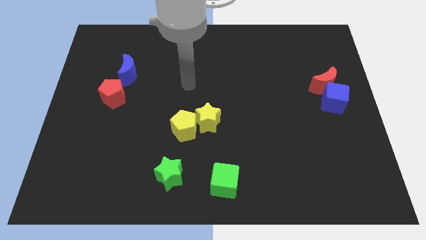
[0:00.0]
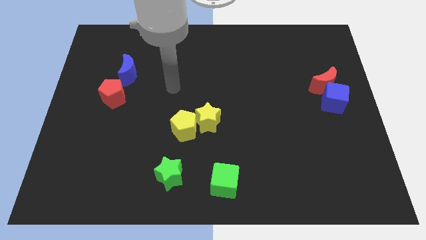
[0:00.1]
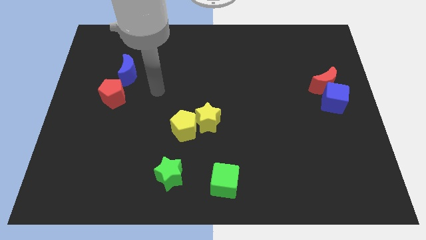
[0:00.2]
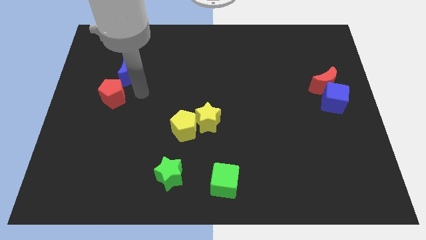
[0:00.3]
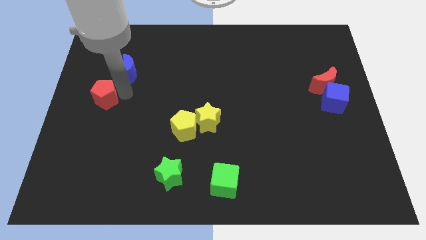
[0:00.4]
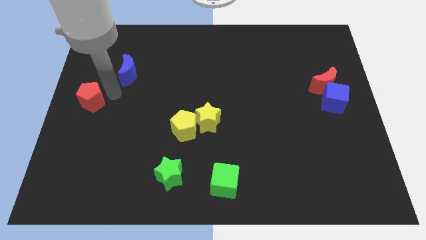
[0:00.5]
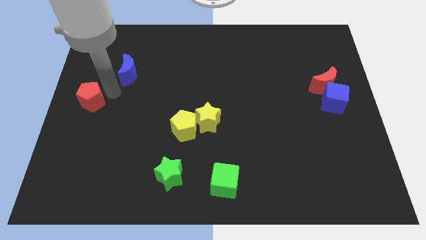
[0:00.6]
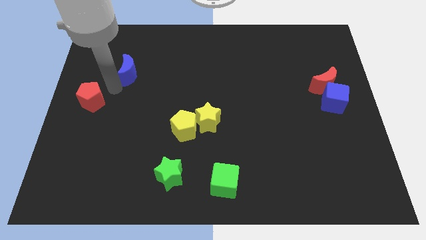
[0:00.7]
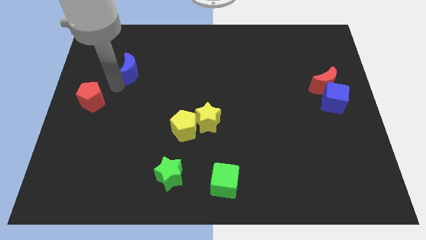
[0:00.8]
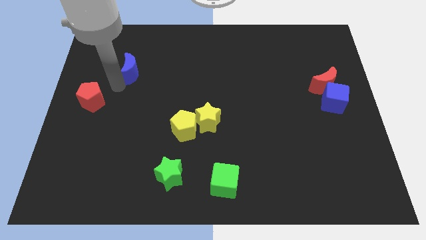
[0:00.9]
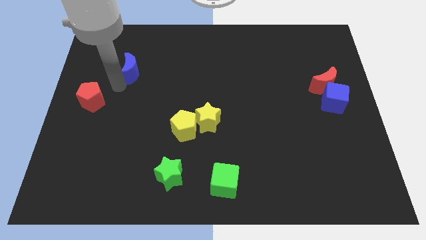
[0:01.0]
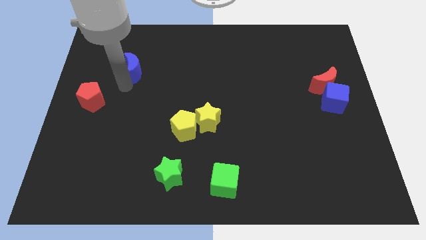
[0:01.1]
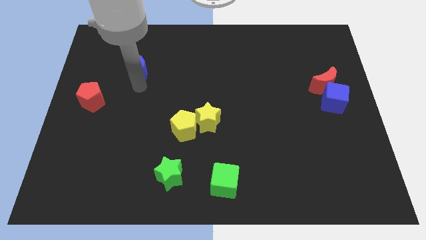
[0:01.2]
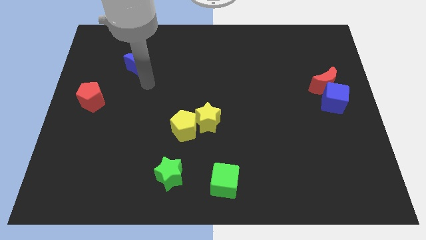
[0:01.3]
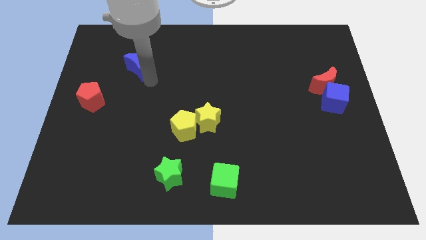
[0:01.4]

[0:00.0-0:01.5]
separate the blue moon from the red pentagon

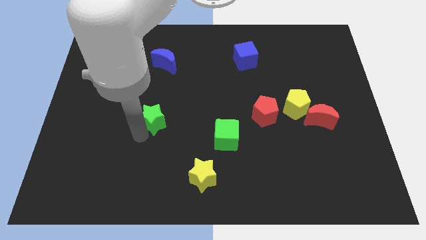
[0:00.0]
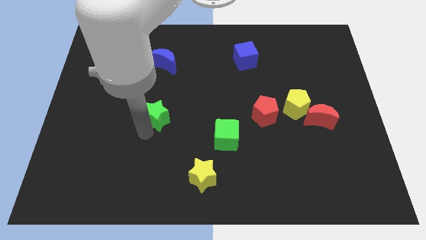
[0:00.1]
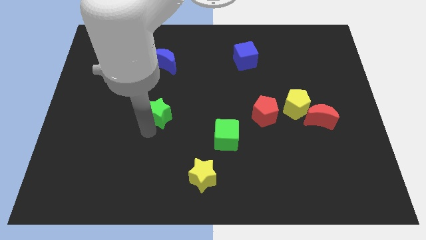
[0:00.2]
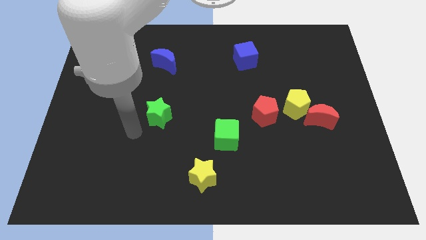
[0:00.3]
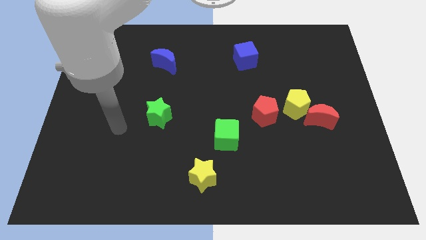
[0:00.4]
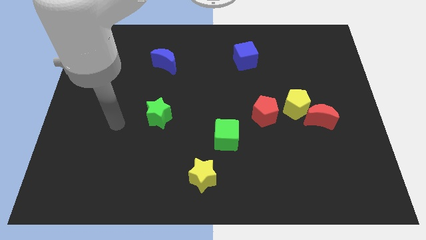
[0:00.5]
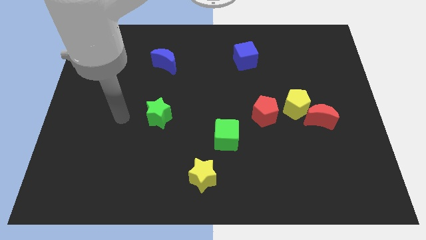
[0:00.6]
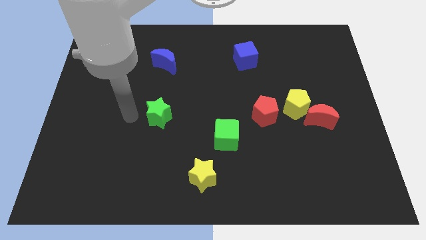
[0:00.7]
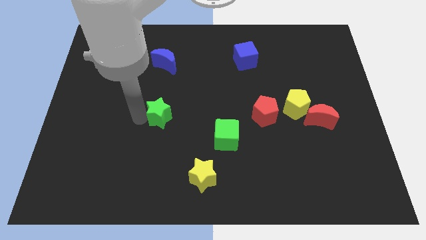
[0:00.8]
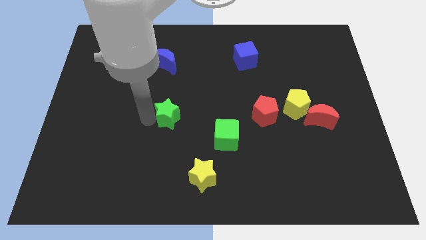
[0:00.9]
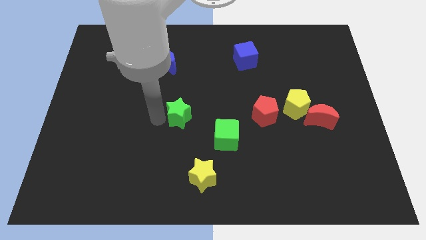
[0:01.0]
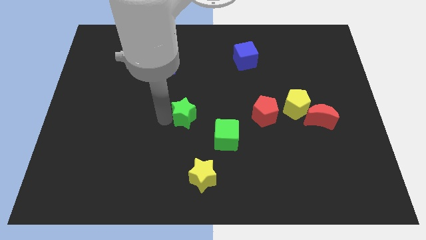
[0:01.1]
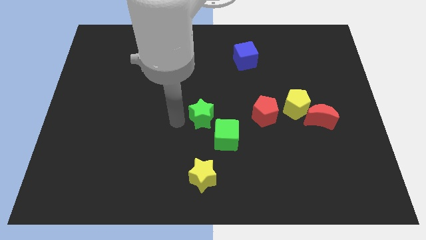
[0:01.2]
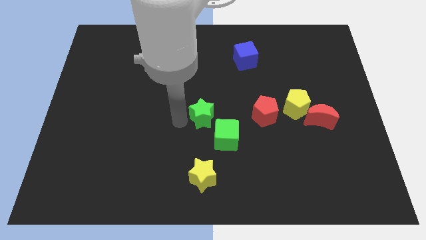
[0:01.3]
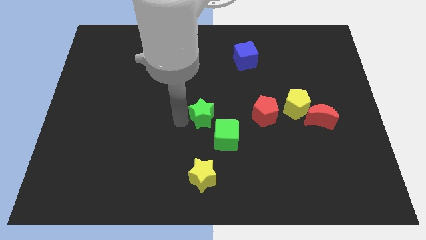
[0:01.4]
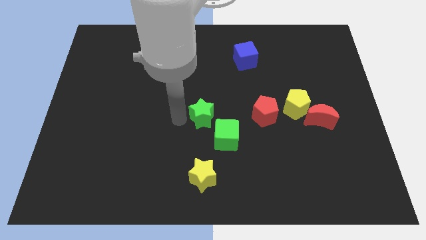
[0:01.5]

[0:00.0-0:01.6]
place green star at the center of the board

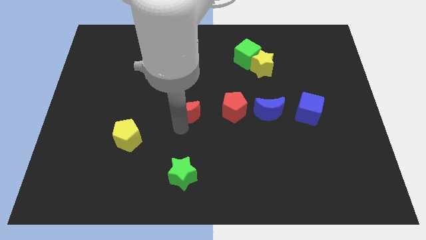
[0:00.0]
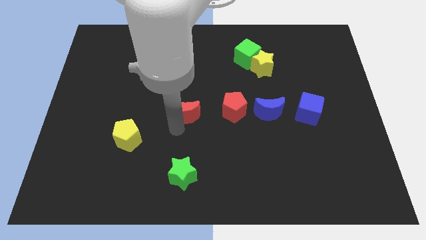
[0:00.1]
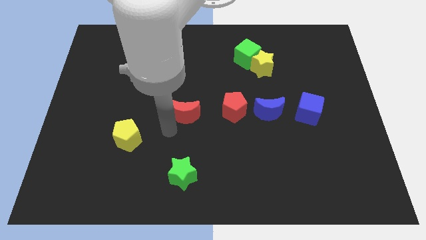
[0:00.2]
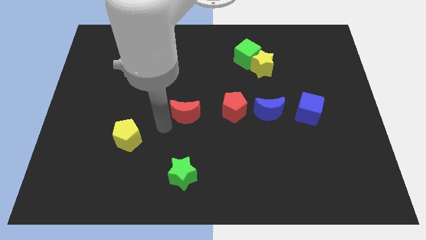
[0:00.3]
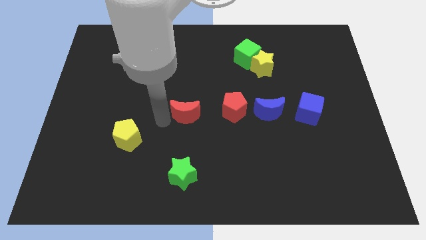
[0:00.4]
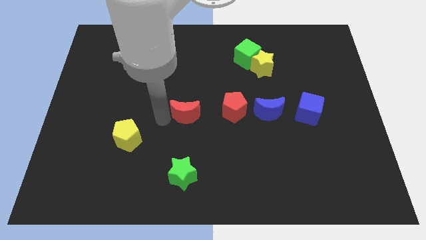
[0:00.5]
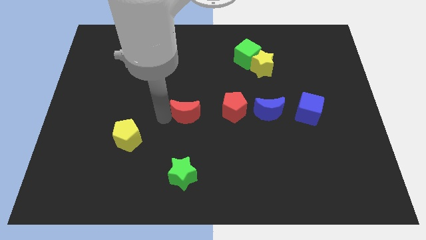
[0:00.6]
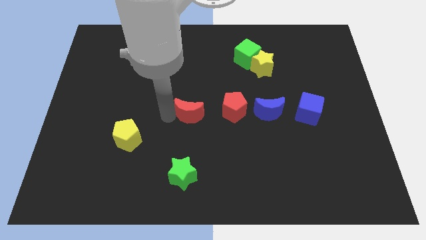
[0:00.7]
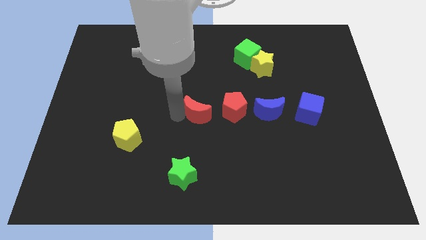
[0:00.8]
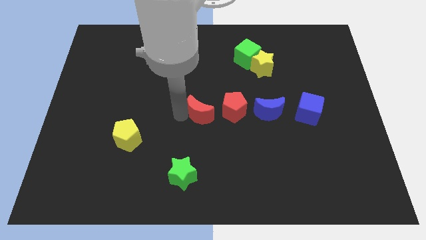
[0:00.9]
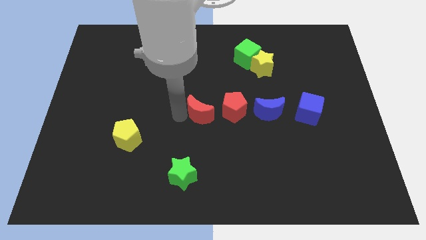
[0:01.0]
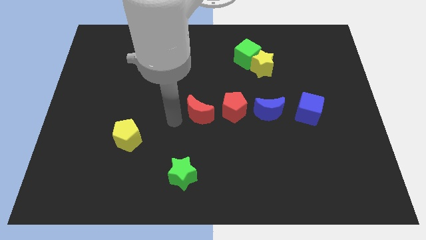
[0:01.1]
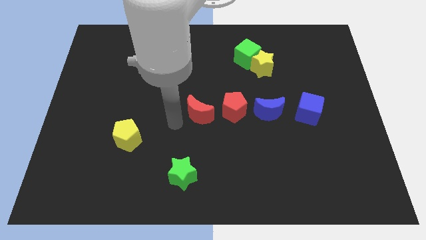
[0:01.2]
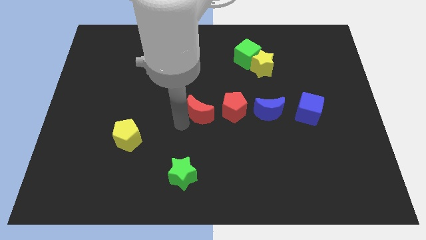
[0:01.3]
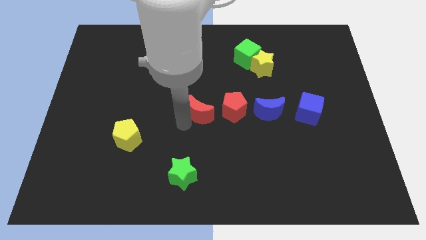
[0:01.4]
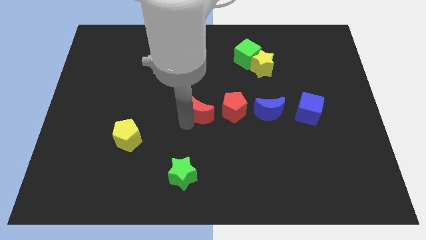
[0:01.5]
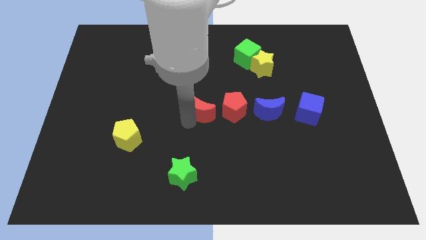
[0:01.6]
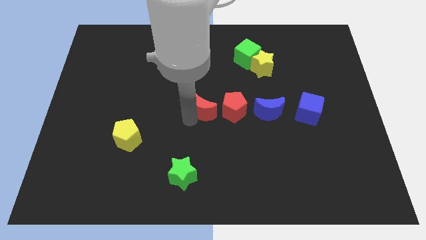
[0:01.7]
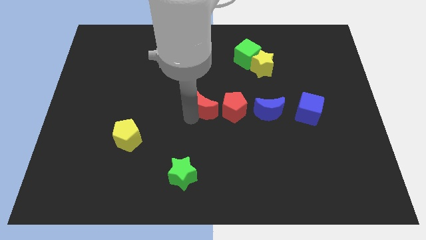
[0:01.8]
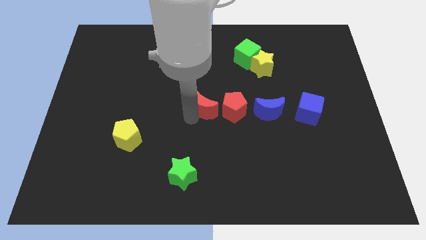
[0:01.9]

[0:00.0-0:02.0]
push the red moon to the left of the red pentagon

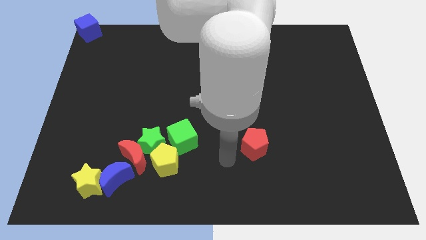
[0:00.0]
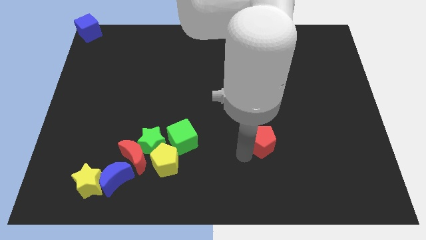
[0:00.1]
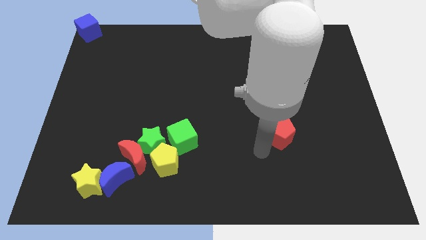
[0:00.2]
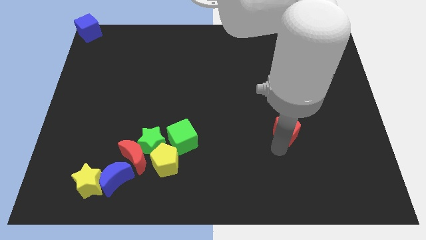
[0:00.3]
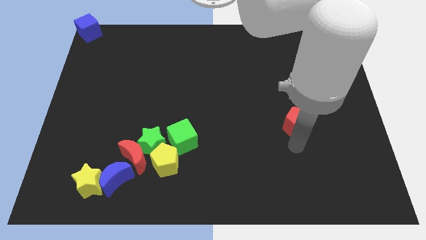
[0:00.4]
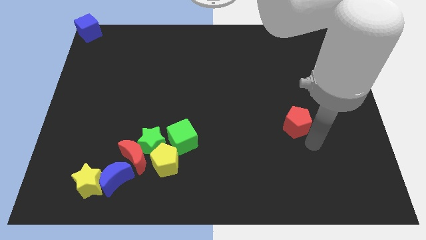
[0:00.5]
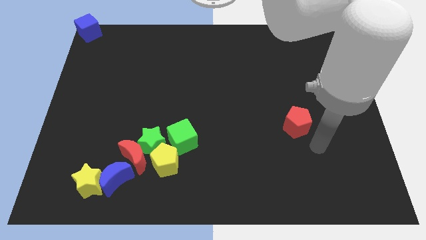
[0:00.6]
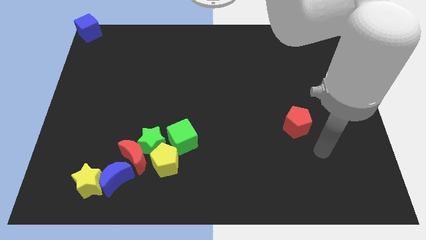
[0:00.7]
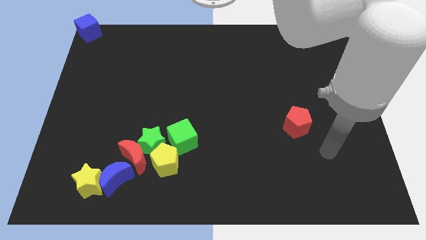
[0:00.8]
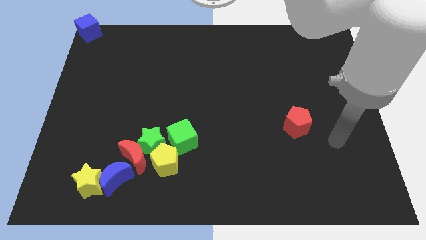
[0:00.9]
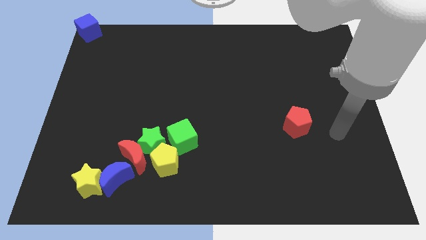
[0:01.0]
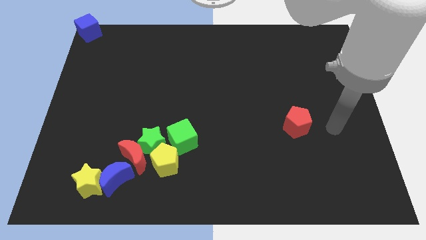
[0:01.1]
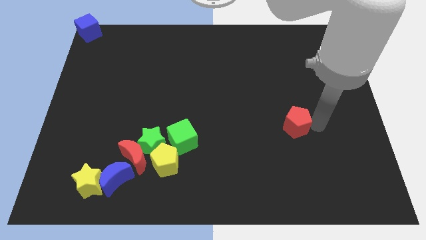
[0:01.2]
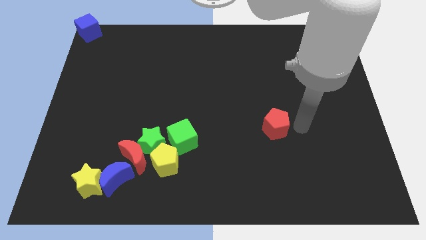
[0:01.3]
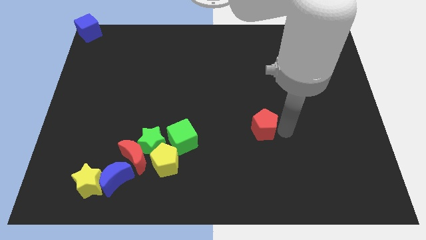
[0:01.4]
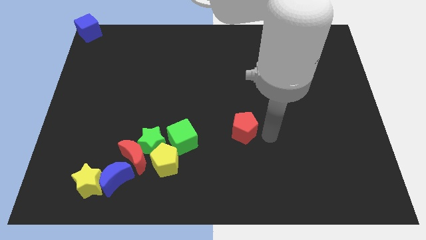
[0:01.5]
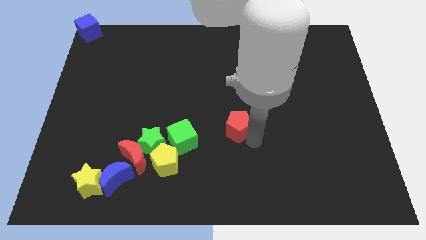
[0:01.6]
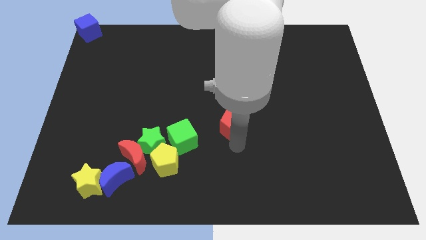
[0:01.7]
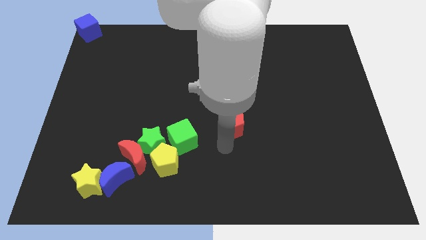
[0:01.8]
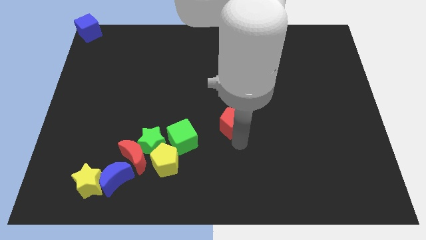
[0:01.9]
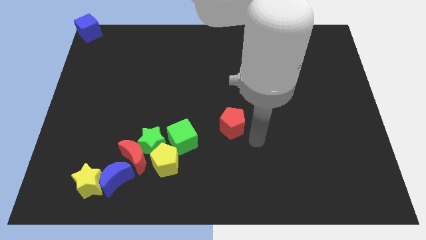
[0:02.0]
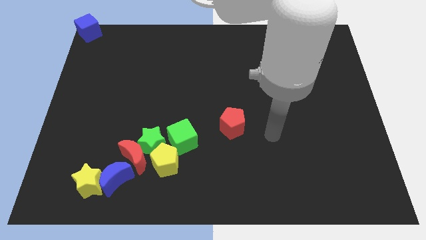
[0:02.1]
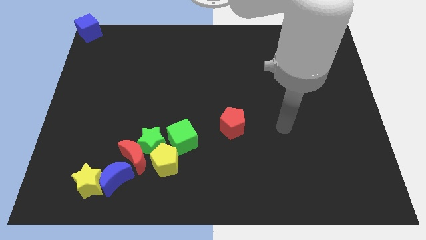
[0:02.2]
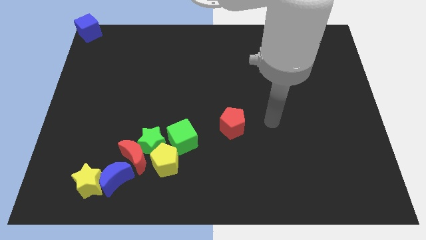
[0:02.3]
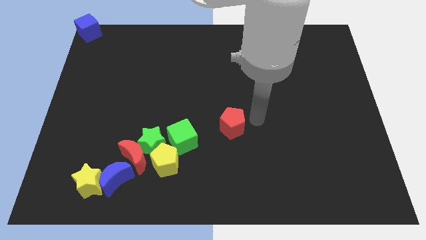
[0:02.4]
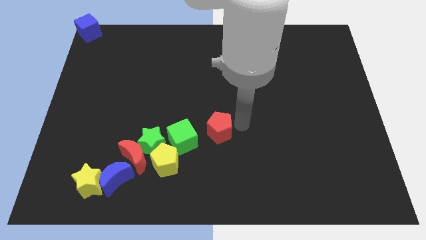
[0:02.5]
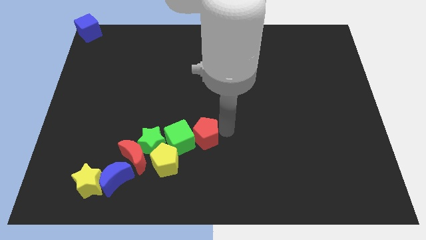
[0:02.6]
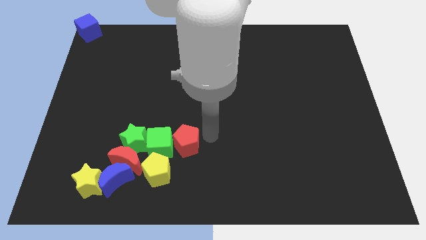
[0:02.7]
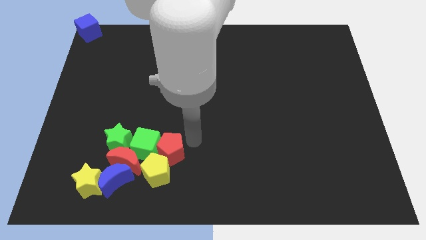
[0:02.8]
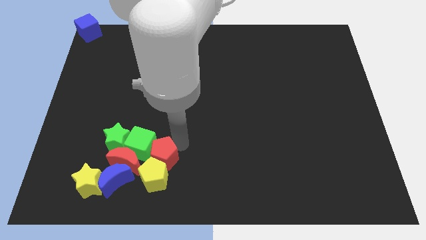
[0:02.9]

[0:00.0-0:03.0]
push the red pentagon into the green cube

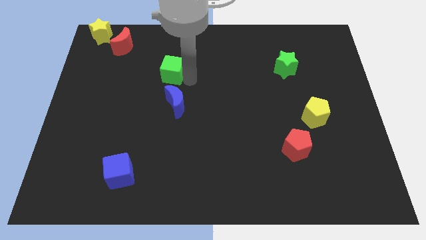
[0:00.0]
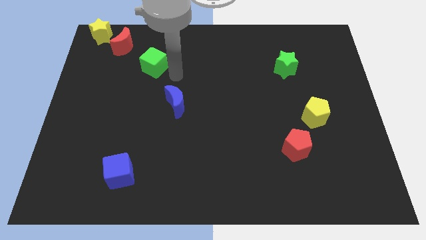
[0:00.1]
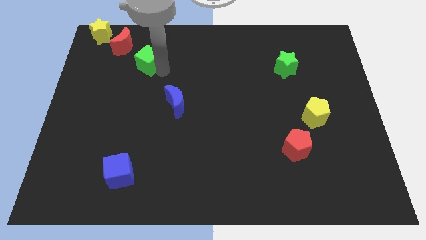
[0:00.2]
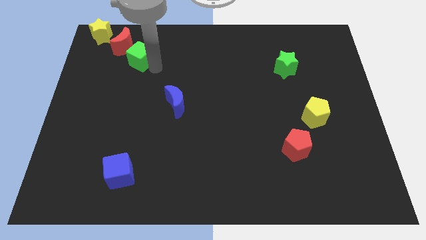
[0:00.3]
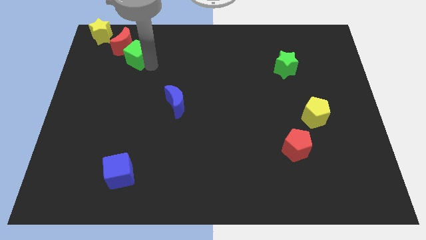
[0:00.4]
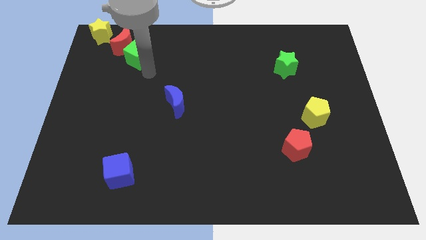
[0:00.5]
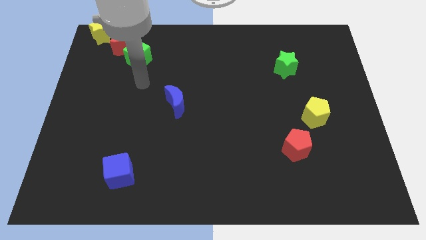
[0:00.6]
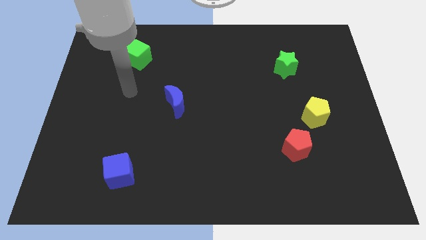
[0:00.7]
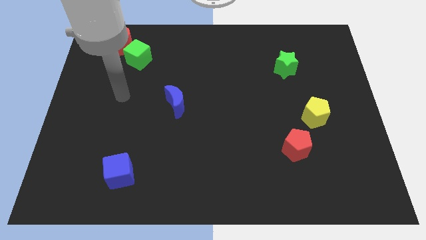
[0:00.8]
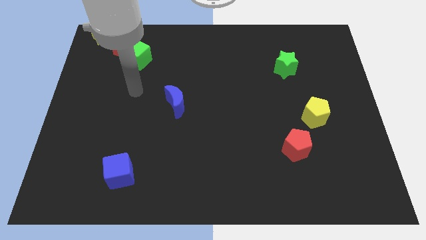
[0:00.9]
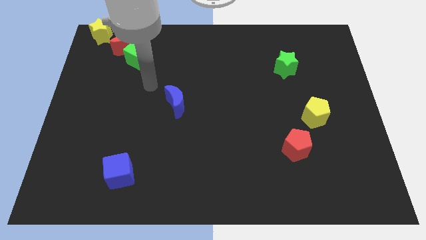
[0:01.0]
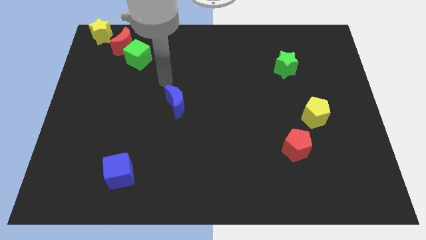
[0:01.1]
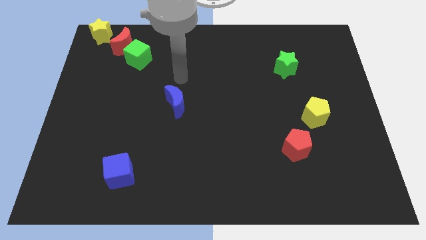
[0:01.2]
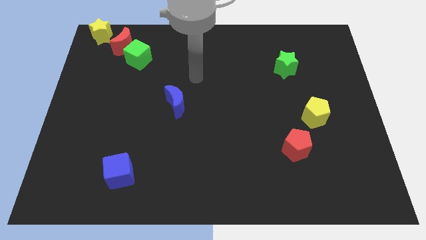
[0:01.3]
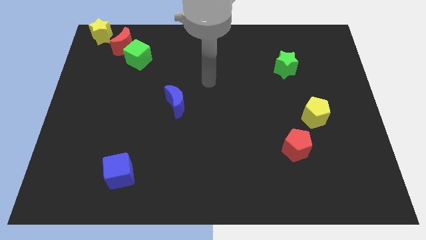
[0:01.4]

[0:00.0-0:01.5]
put the green cube underneath the red moon
